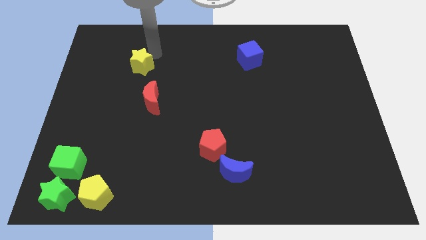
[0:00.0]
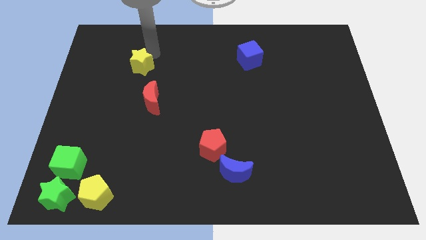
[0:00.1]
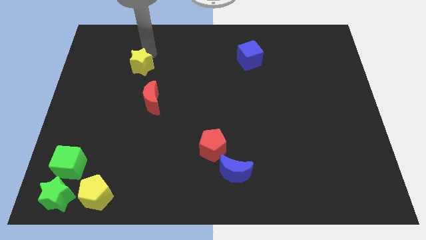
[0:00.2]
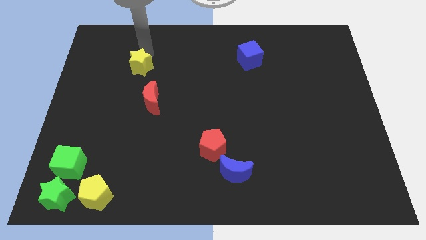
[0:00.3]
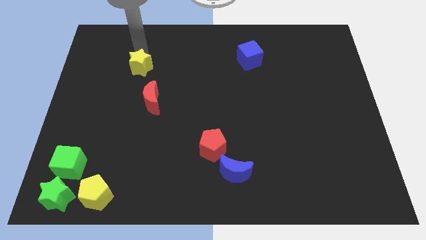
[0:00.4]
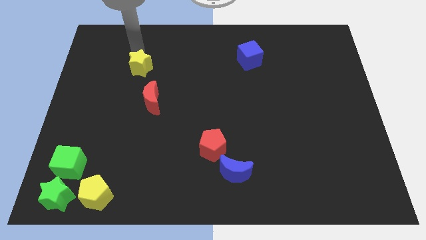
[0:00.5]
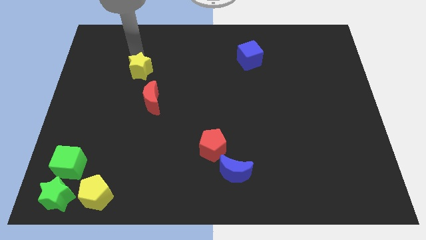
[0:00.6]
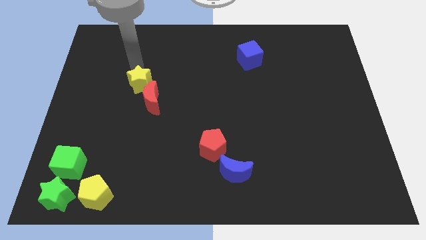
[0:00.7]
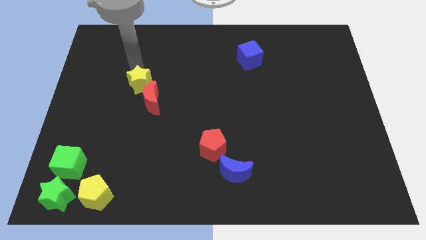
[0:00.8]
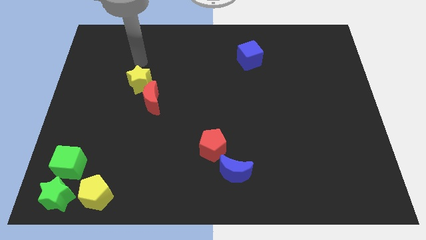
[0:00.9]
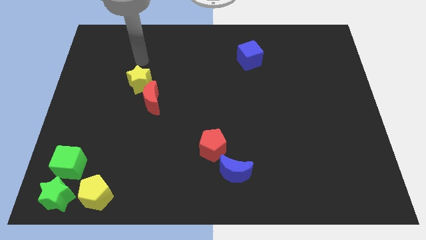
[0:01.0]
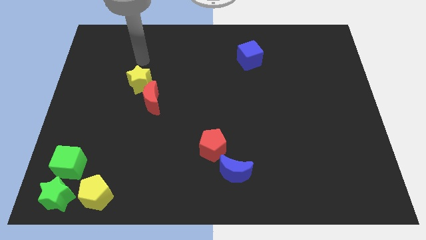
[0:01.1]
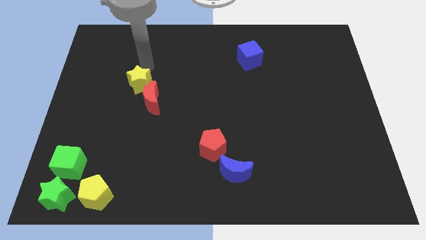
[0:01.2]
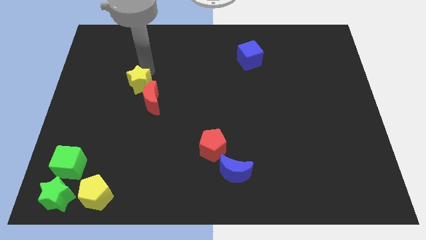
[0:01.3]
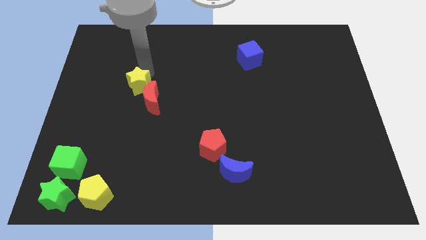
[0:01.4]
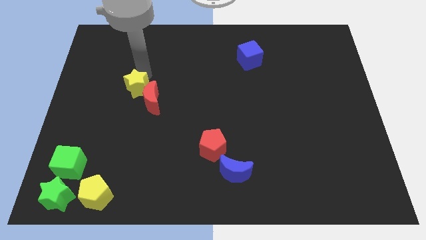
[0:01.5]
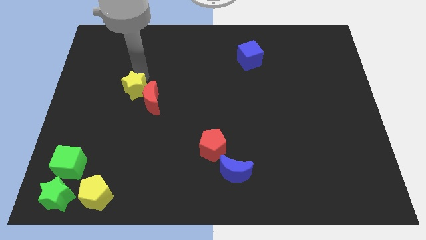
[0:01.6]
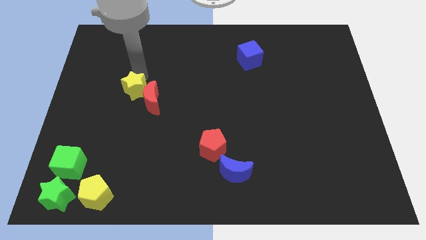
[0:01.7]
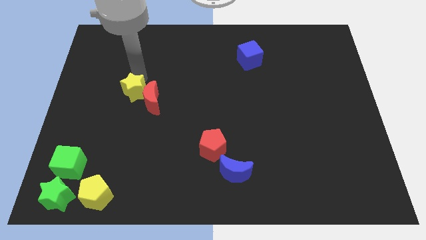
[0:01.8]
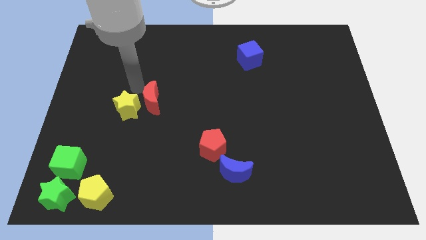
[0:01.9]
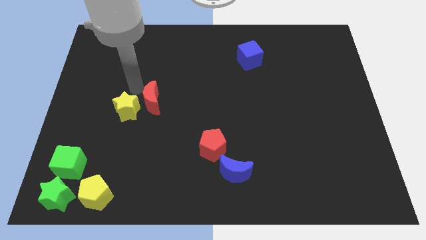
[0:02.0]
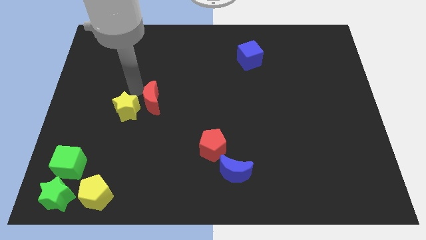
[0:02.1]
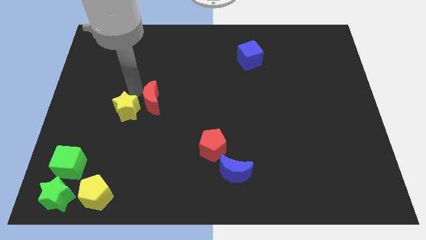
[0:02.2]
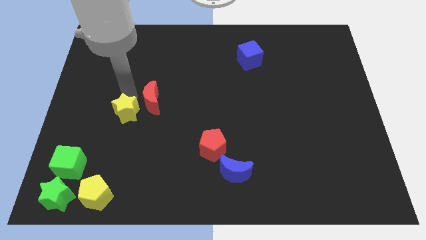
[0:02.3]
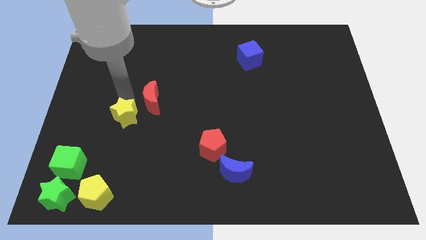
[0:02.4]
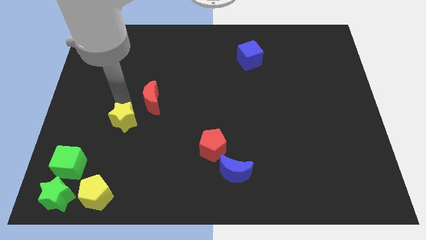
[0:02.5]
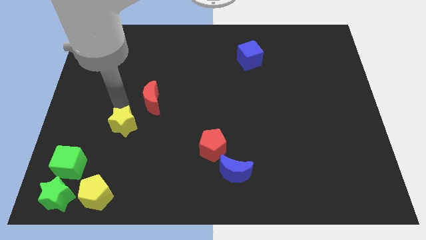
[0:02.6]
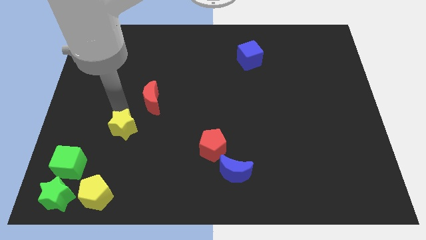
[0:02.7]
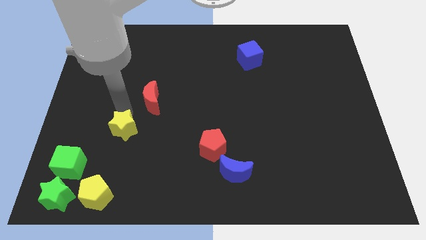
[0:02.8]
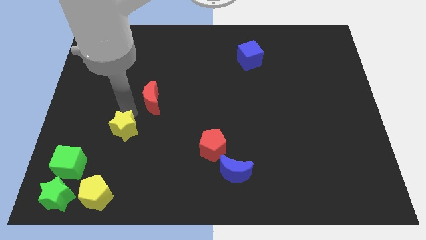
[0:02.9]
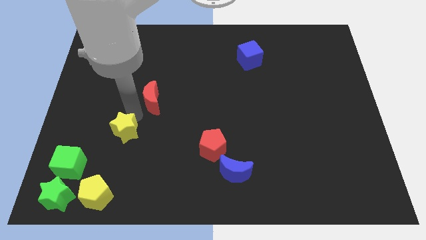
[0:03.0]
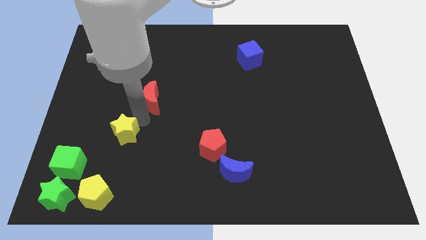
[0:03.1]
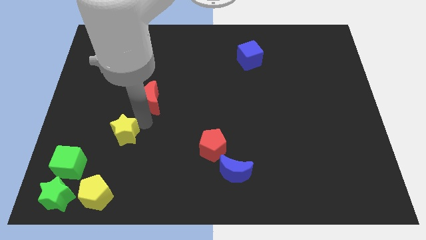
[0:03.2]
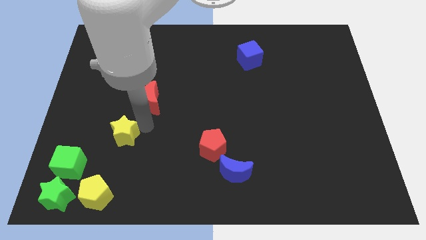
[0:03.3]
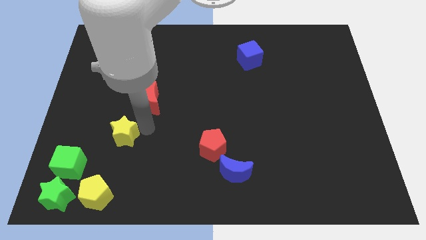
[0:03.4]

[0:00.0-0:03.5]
place the yellow star diagonally to the right of the green cube

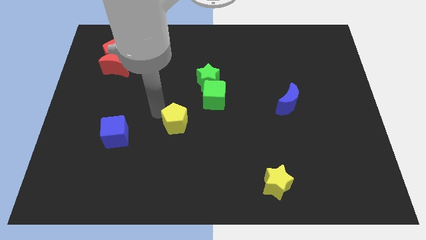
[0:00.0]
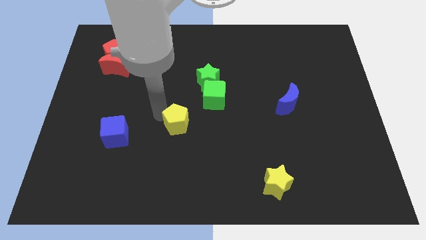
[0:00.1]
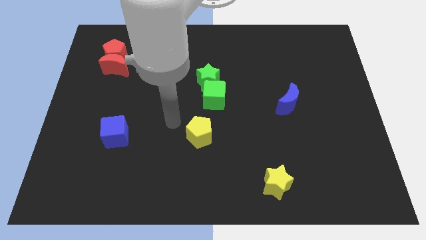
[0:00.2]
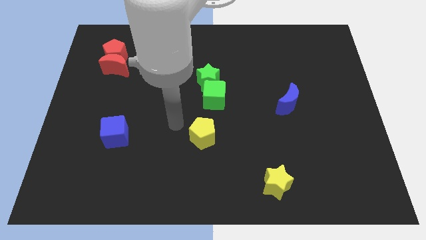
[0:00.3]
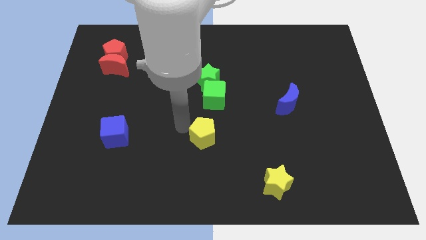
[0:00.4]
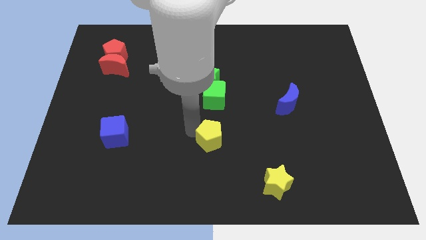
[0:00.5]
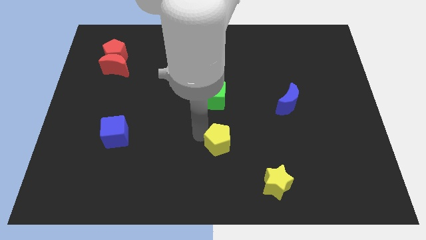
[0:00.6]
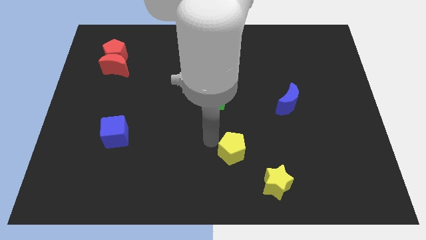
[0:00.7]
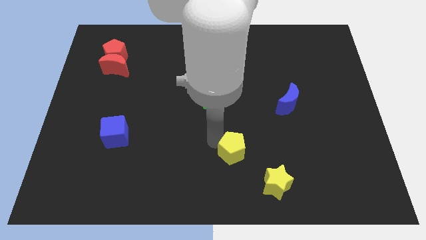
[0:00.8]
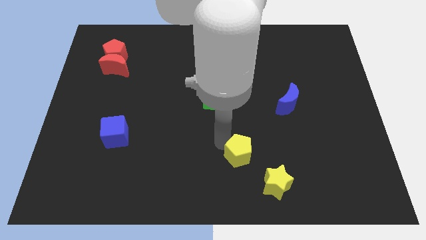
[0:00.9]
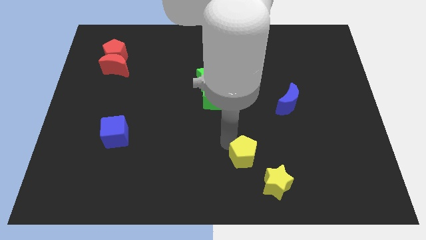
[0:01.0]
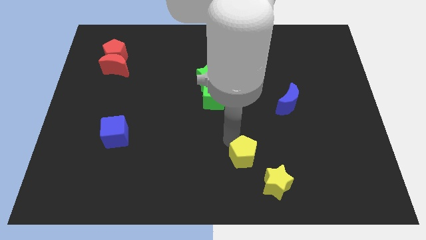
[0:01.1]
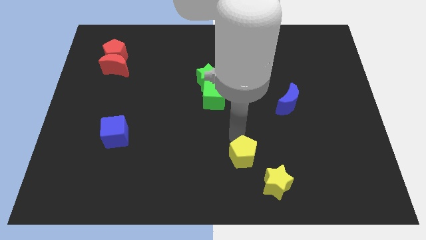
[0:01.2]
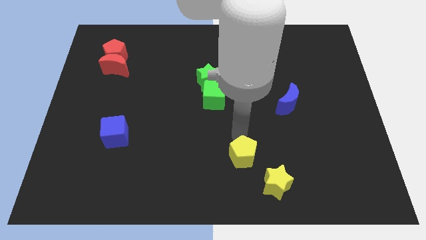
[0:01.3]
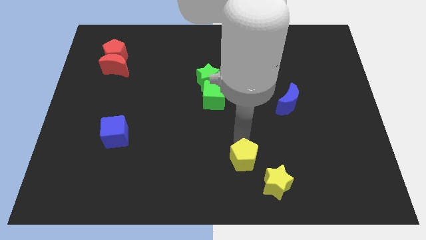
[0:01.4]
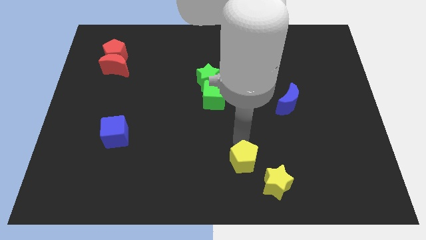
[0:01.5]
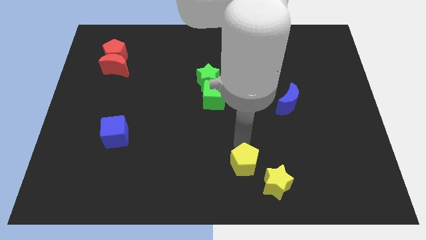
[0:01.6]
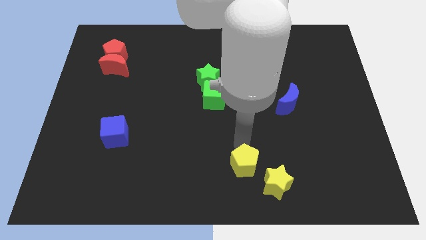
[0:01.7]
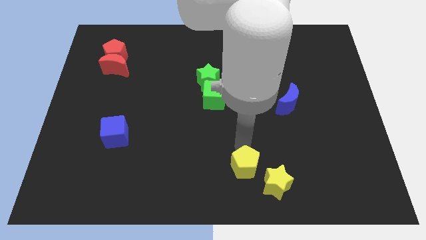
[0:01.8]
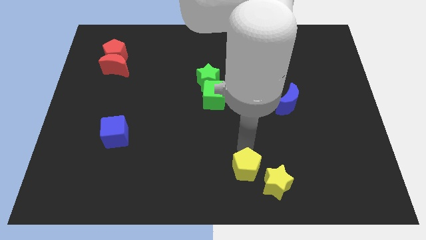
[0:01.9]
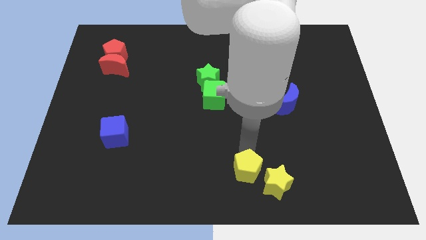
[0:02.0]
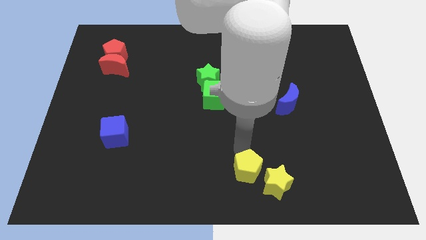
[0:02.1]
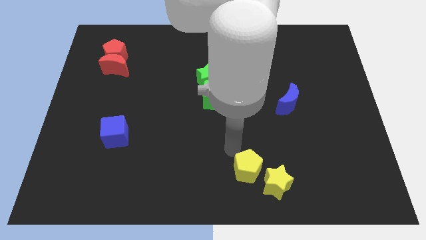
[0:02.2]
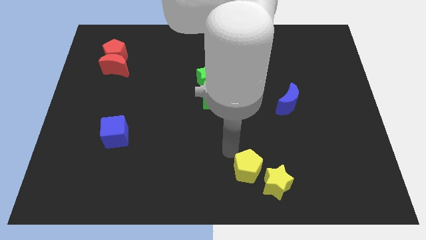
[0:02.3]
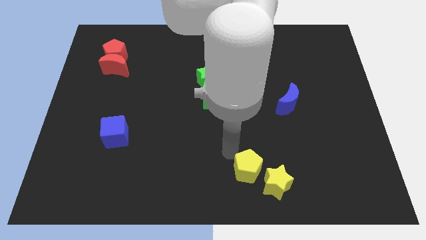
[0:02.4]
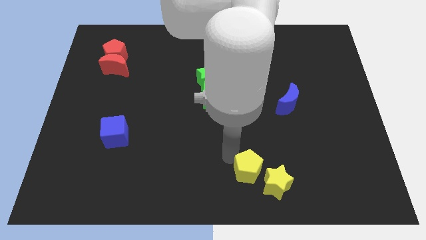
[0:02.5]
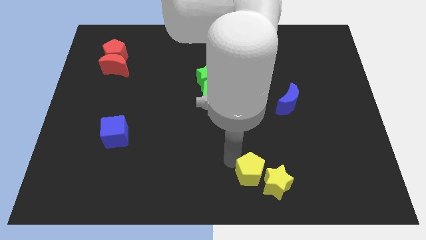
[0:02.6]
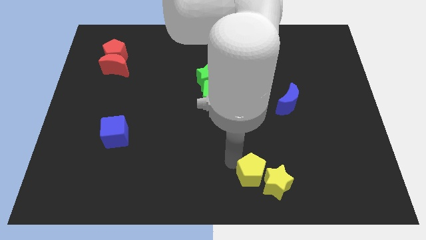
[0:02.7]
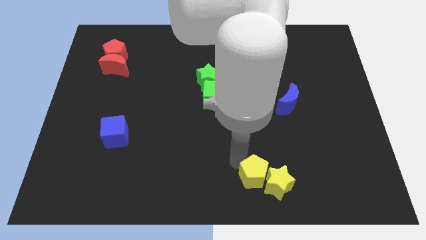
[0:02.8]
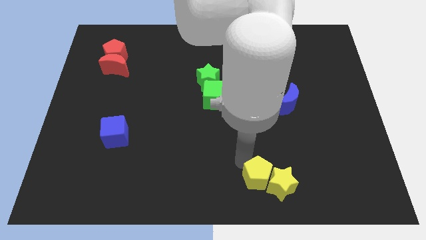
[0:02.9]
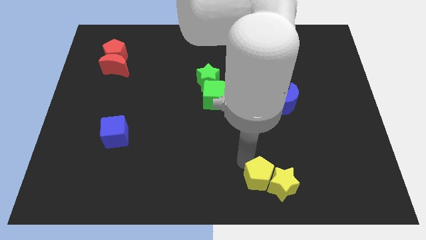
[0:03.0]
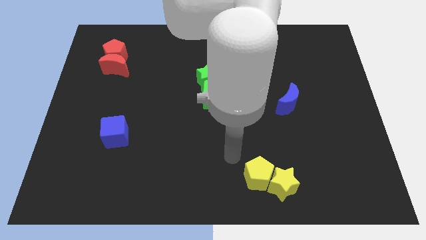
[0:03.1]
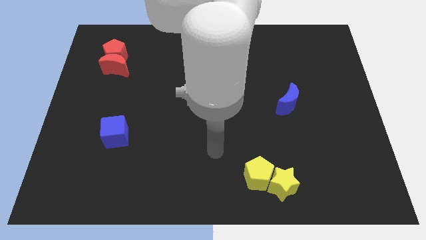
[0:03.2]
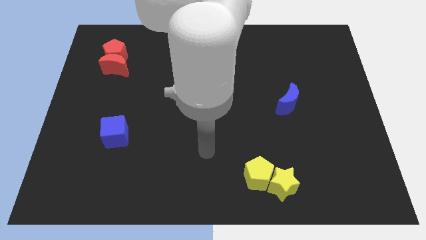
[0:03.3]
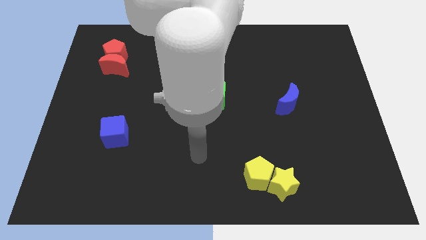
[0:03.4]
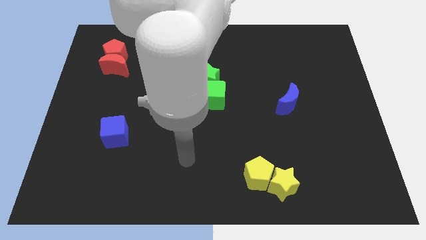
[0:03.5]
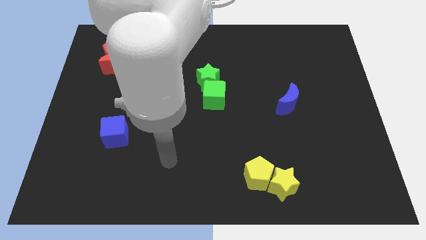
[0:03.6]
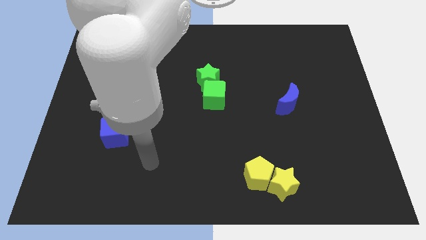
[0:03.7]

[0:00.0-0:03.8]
place yellow pentagon into the yellow star

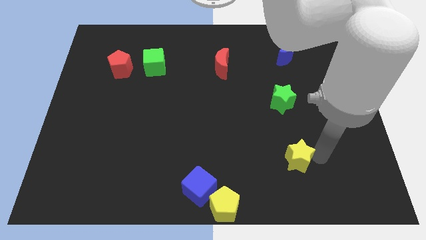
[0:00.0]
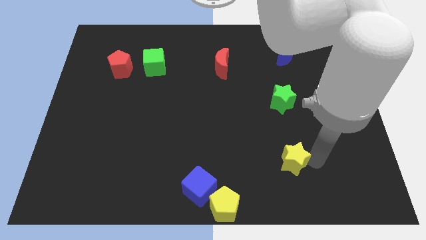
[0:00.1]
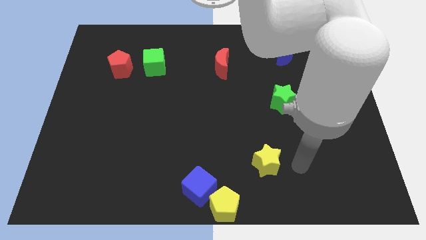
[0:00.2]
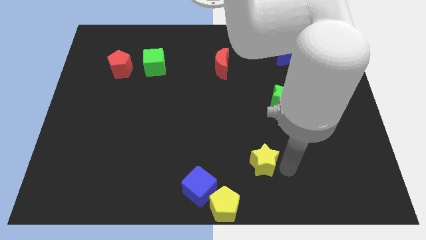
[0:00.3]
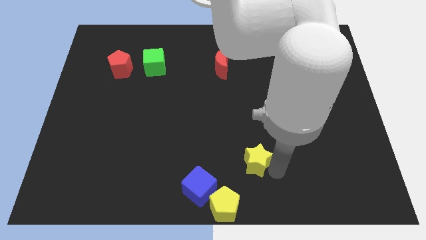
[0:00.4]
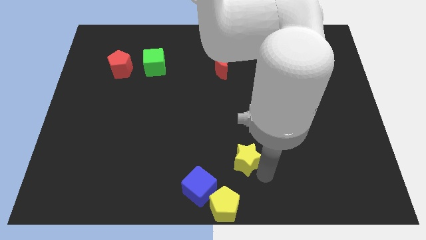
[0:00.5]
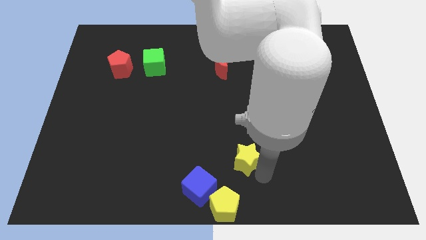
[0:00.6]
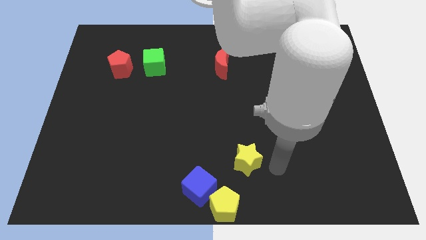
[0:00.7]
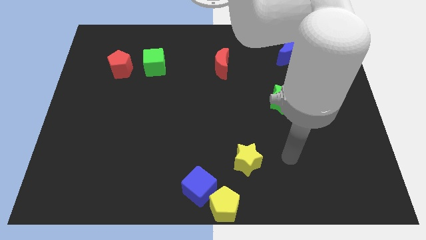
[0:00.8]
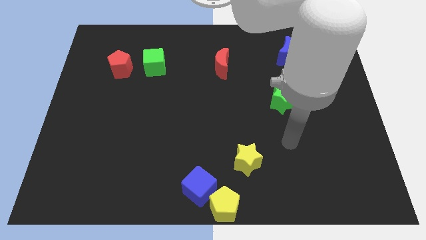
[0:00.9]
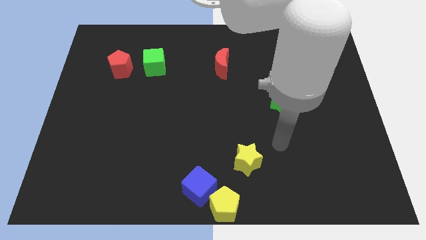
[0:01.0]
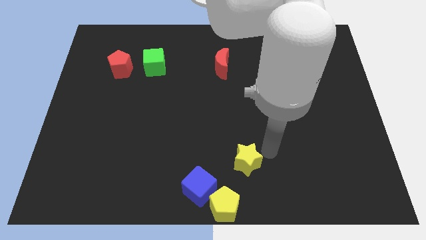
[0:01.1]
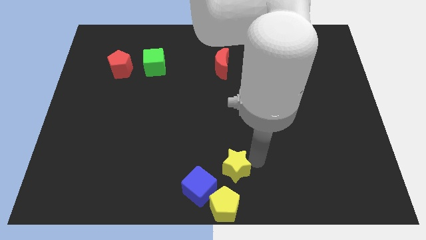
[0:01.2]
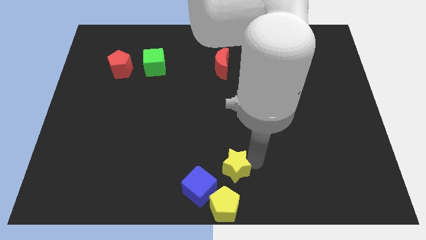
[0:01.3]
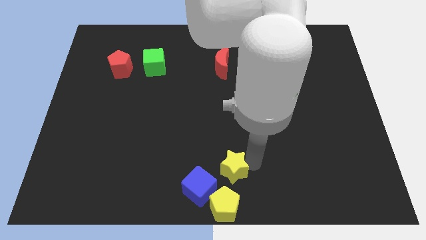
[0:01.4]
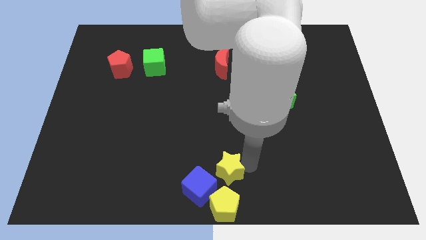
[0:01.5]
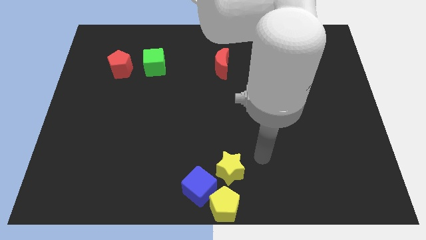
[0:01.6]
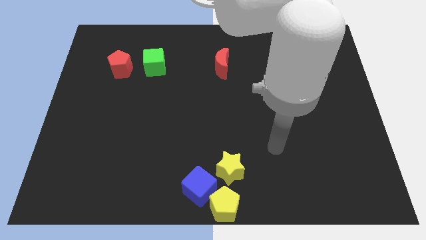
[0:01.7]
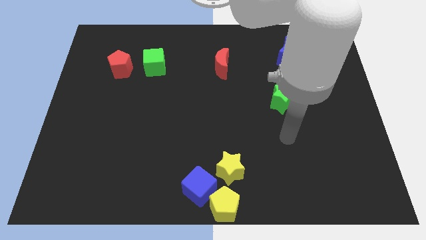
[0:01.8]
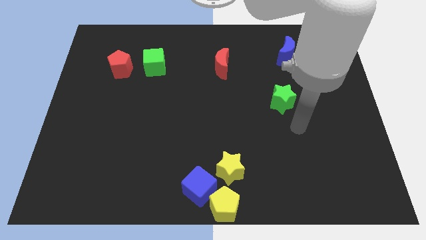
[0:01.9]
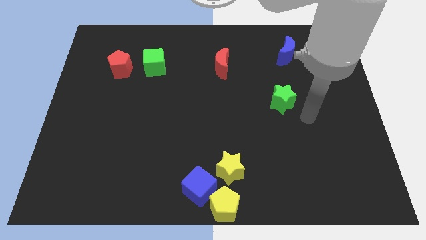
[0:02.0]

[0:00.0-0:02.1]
drag yellow star vertically above the yellow pentagon
